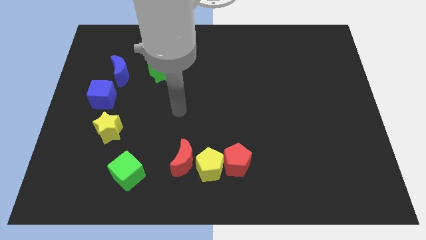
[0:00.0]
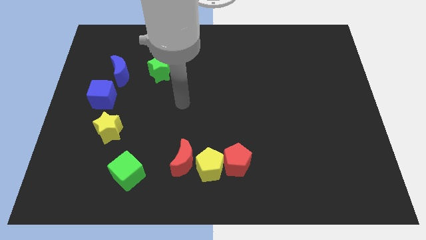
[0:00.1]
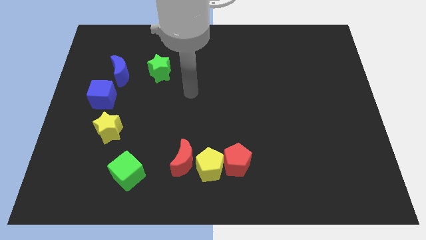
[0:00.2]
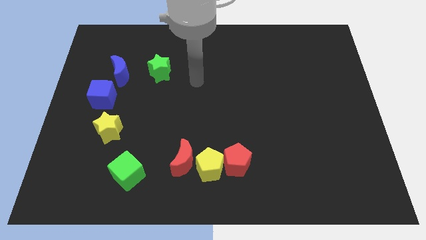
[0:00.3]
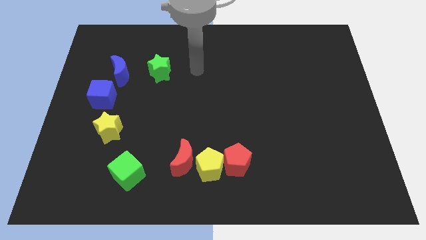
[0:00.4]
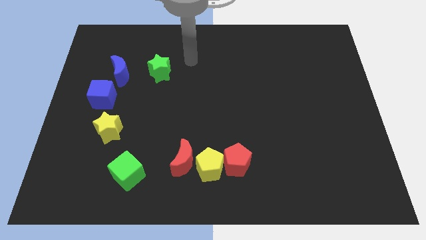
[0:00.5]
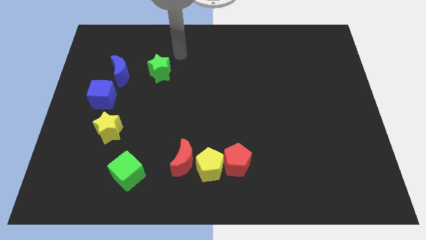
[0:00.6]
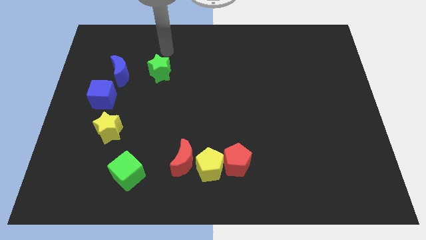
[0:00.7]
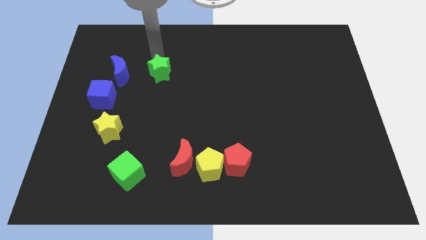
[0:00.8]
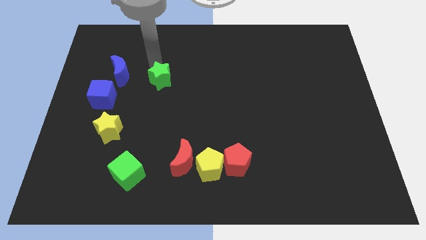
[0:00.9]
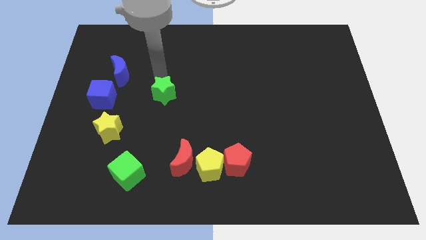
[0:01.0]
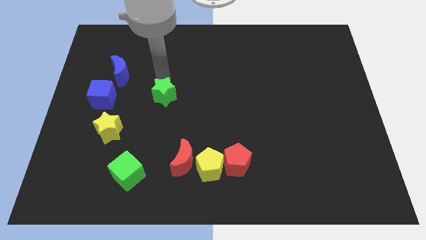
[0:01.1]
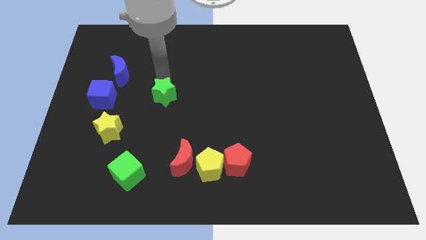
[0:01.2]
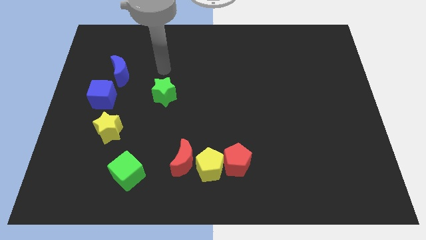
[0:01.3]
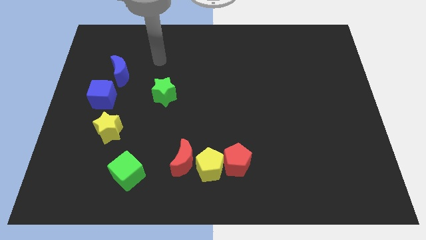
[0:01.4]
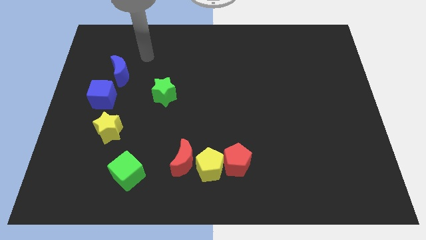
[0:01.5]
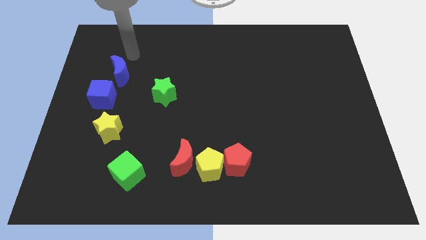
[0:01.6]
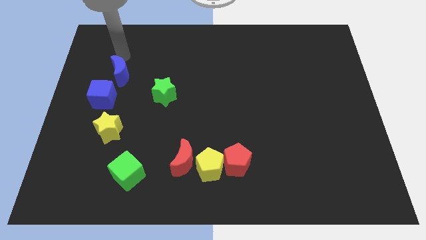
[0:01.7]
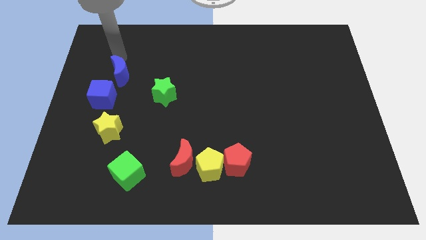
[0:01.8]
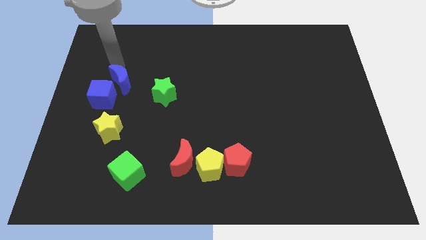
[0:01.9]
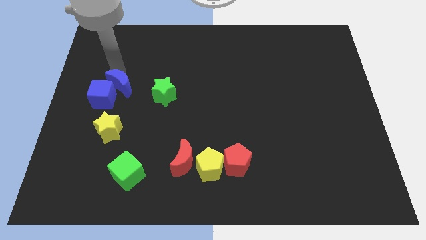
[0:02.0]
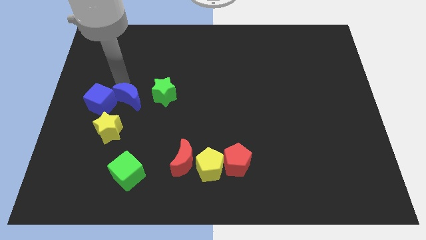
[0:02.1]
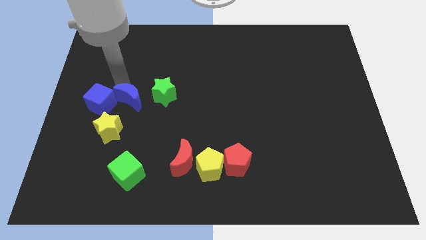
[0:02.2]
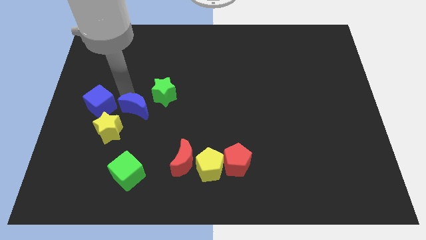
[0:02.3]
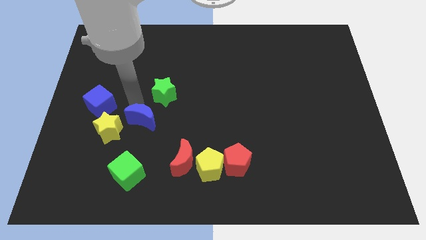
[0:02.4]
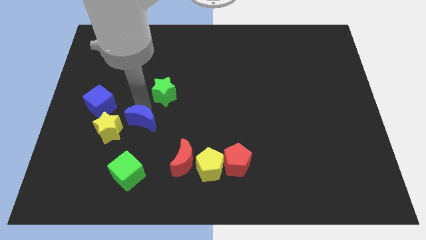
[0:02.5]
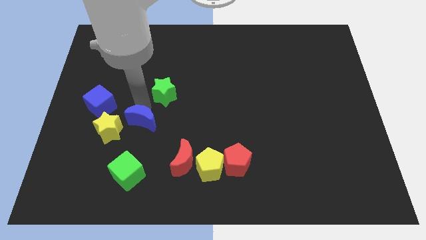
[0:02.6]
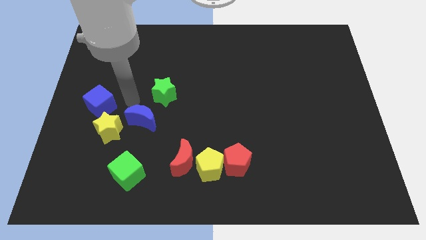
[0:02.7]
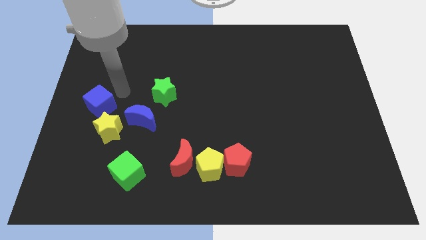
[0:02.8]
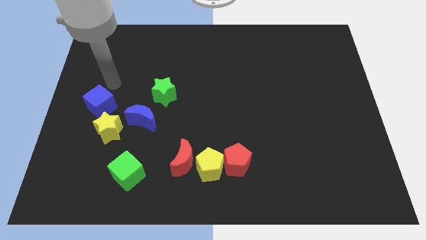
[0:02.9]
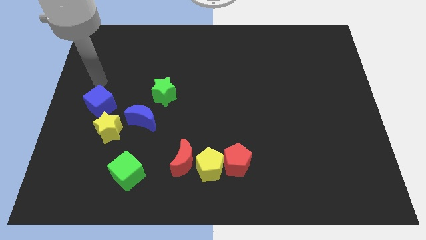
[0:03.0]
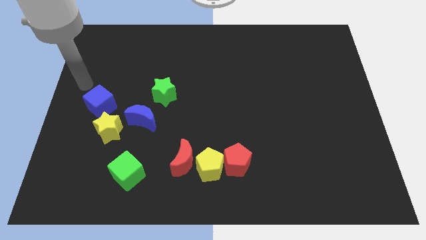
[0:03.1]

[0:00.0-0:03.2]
move the green star and blue moon towards the red moon

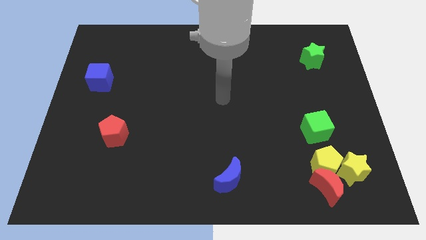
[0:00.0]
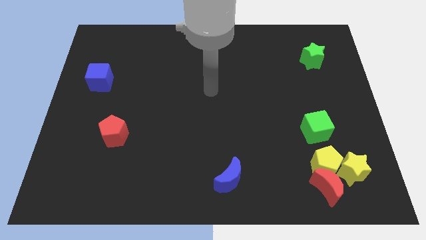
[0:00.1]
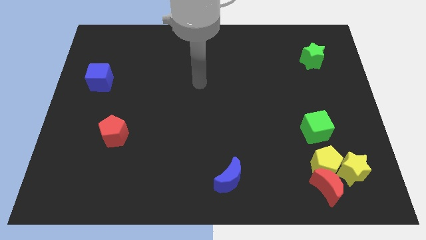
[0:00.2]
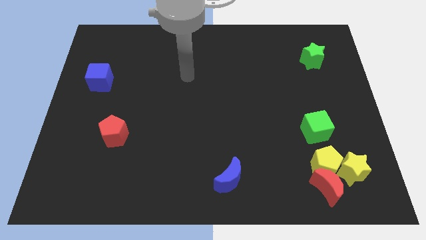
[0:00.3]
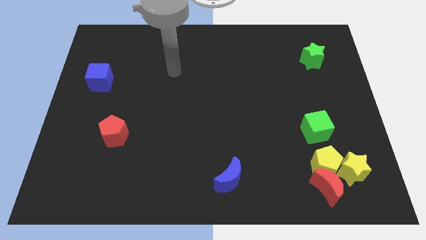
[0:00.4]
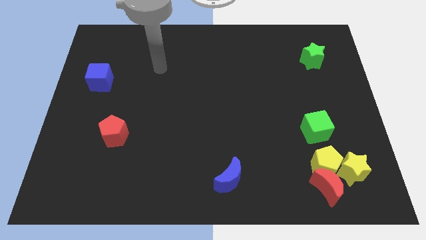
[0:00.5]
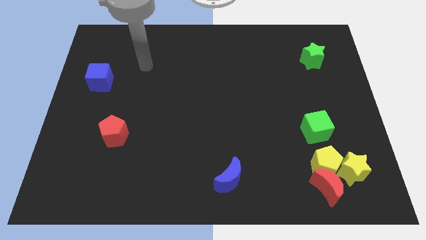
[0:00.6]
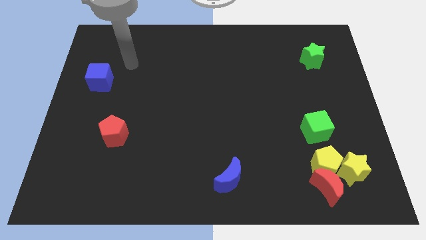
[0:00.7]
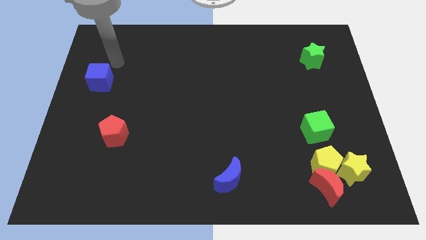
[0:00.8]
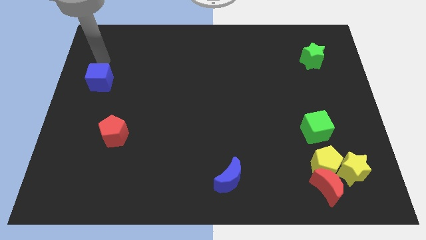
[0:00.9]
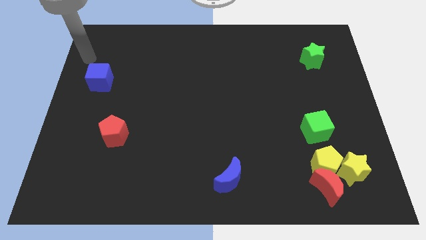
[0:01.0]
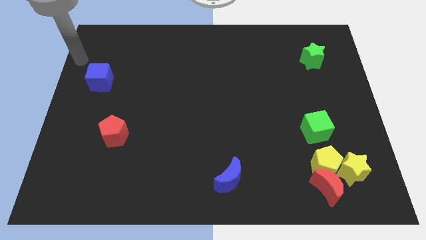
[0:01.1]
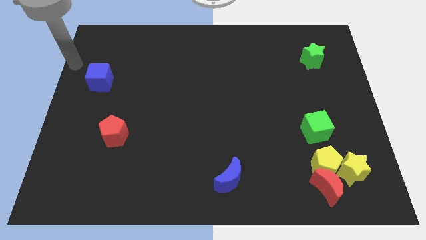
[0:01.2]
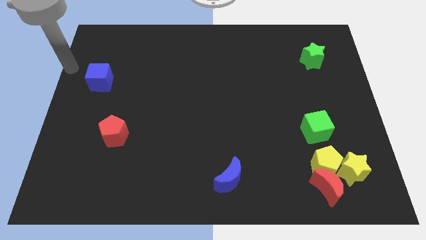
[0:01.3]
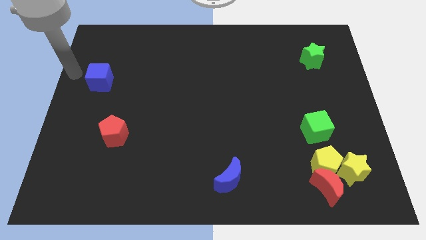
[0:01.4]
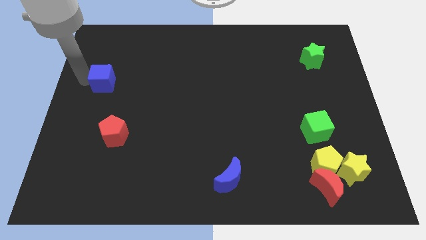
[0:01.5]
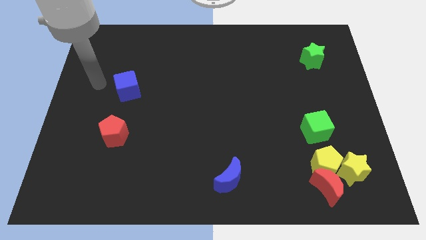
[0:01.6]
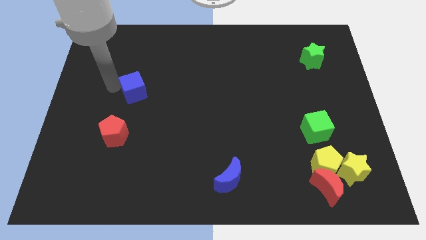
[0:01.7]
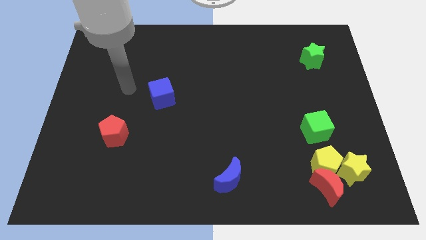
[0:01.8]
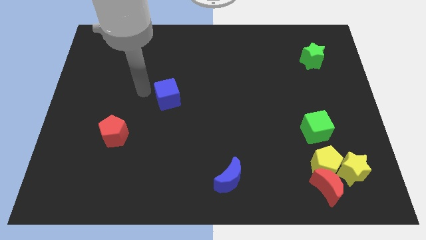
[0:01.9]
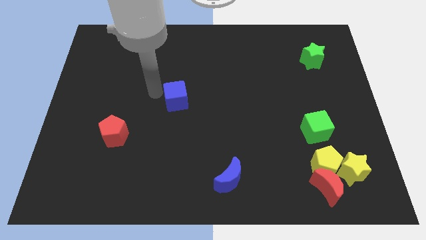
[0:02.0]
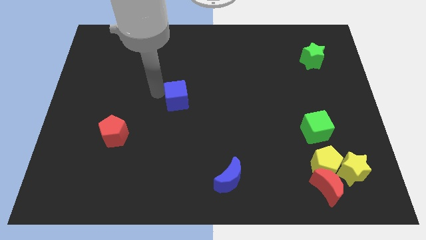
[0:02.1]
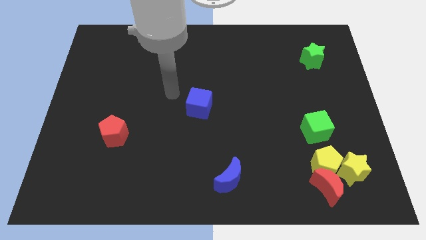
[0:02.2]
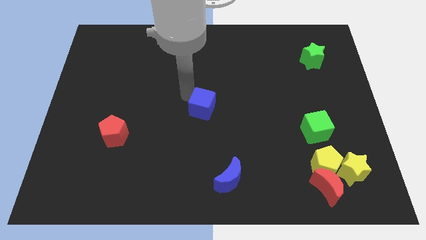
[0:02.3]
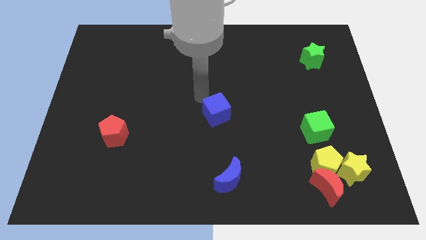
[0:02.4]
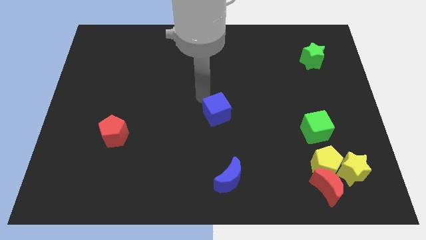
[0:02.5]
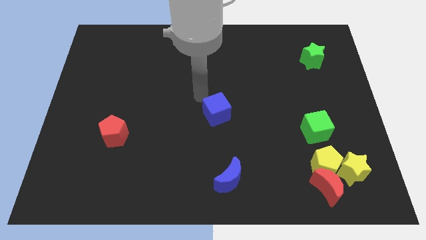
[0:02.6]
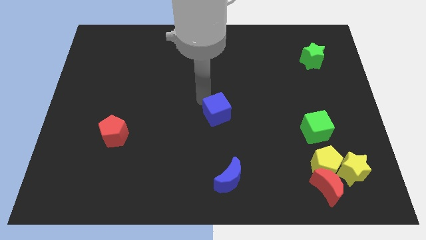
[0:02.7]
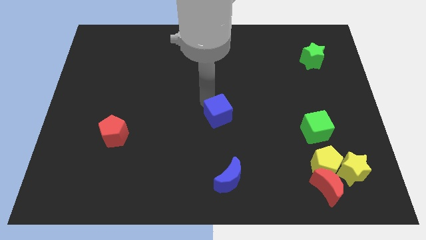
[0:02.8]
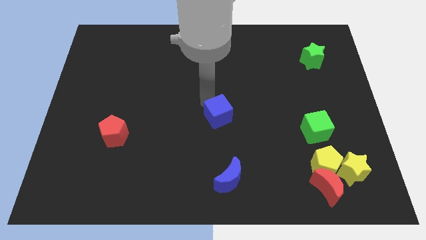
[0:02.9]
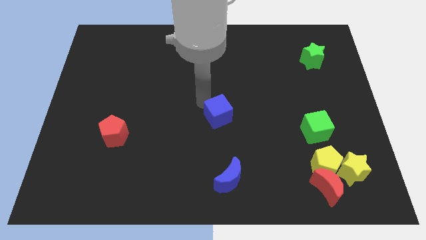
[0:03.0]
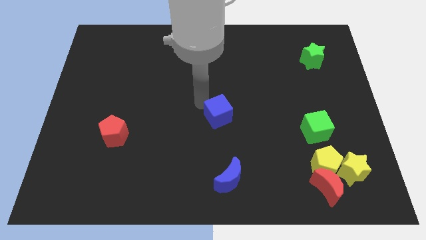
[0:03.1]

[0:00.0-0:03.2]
push blue cube above blue crescent

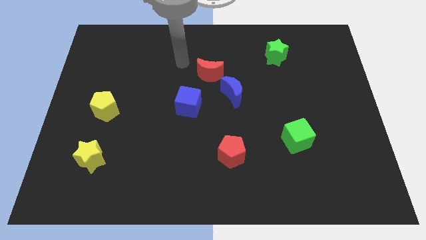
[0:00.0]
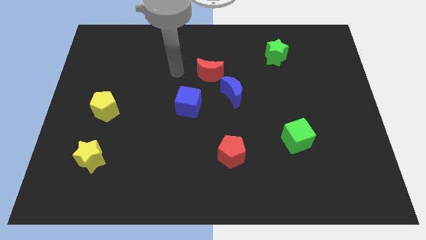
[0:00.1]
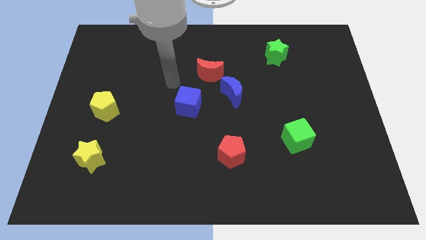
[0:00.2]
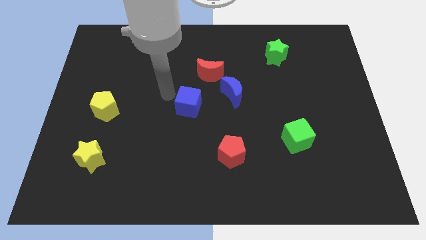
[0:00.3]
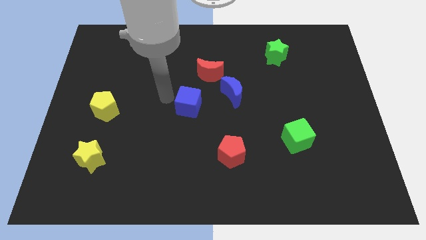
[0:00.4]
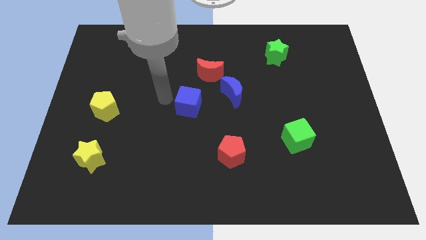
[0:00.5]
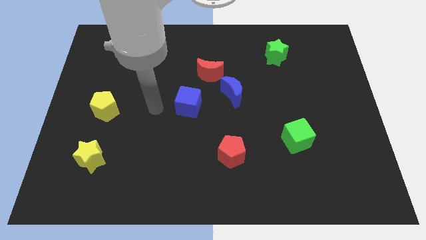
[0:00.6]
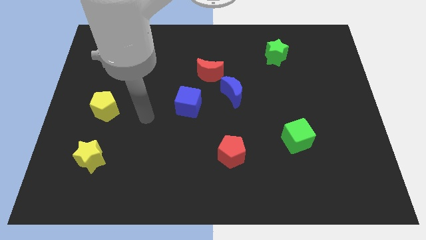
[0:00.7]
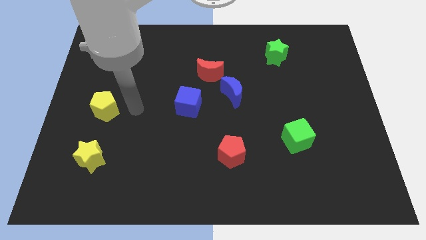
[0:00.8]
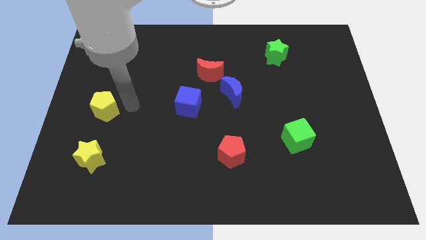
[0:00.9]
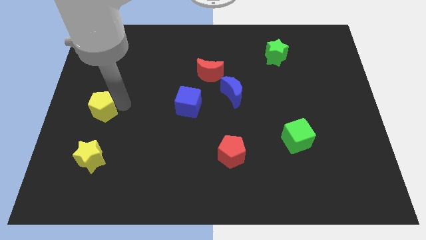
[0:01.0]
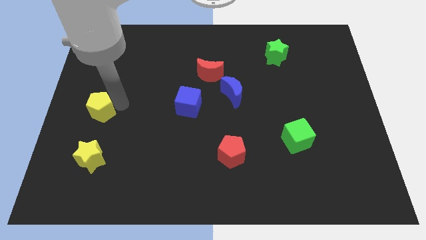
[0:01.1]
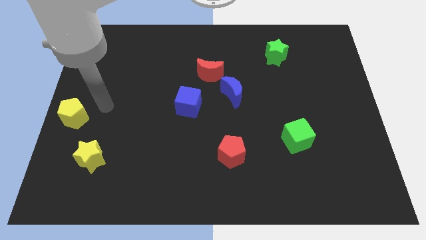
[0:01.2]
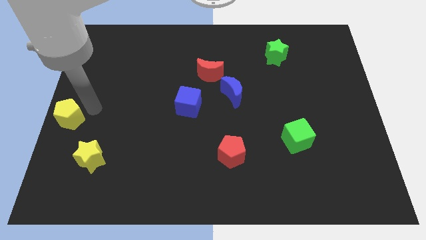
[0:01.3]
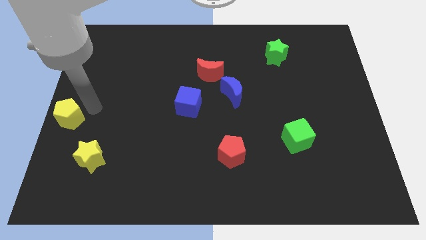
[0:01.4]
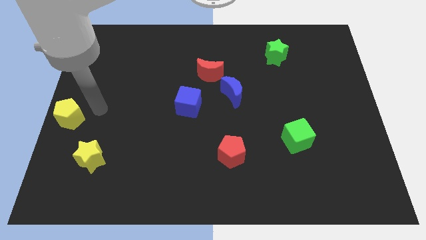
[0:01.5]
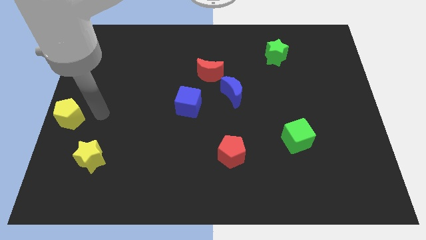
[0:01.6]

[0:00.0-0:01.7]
push the yellow pentagon to the left center of the board

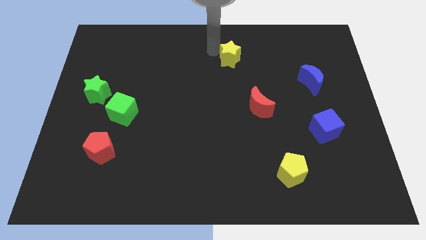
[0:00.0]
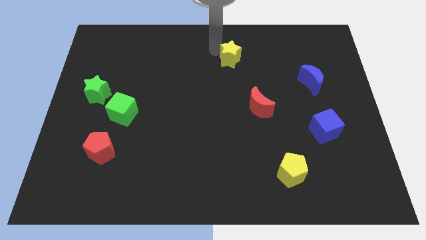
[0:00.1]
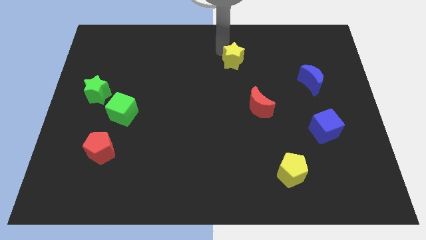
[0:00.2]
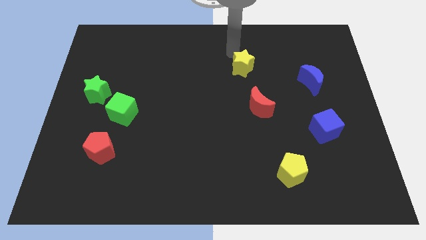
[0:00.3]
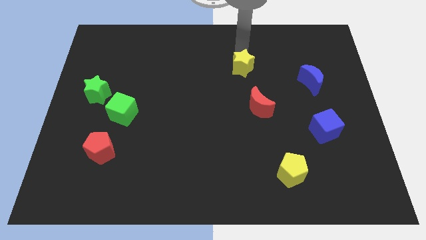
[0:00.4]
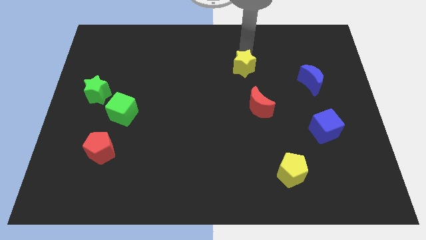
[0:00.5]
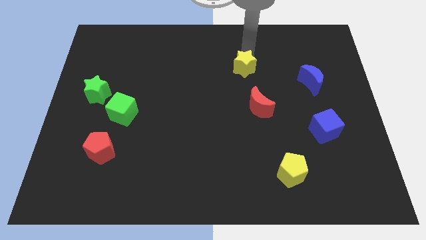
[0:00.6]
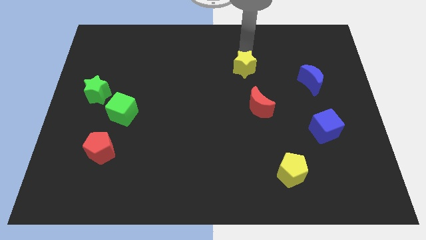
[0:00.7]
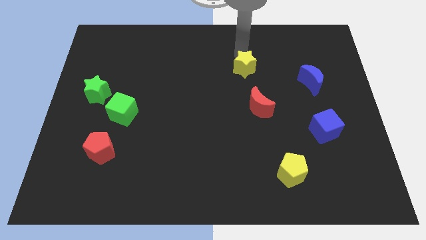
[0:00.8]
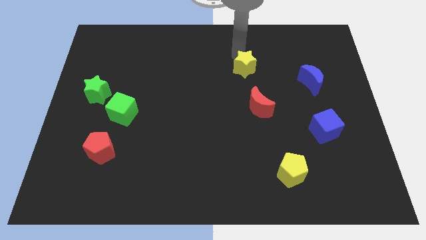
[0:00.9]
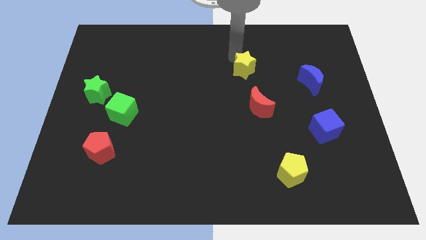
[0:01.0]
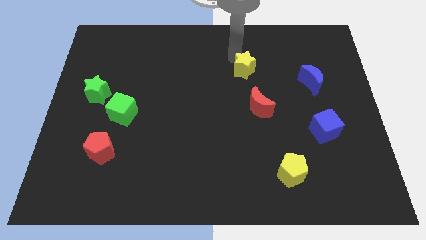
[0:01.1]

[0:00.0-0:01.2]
slide the yellow star towards the red moon
